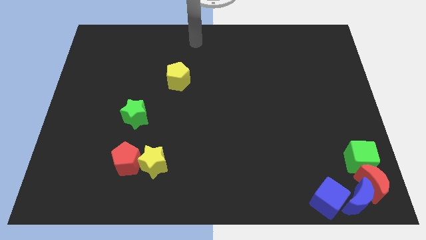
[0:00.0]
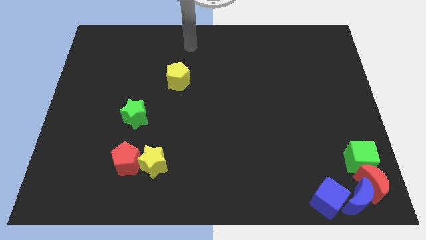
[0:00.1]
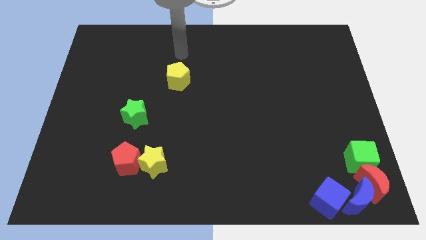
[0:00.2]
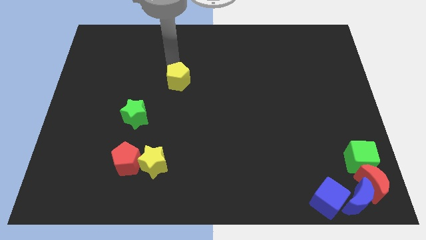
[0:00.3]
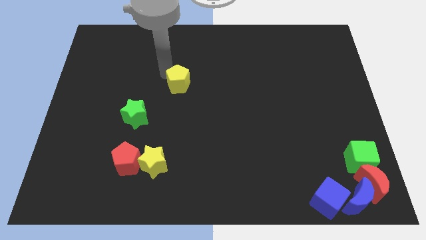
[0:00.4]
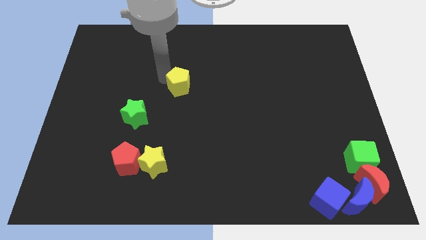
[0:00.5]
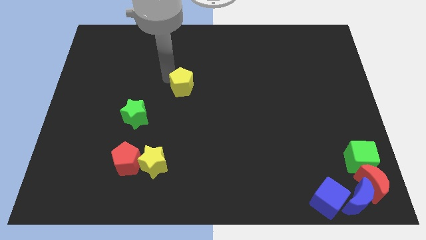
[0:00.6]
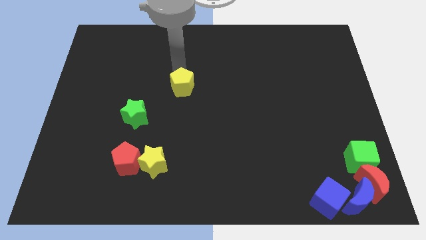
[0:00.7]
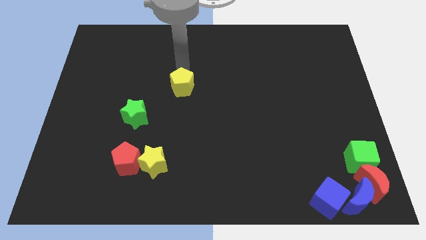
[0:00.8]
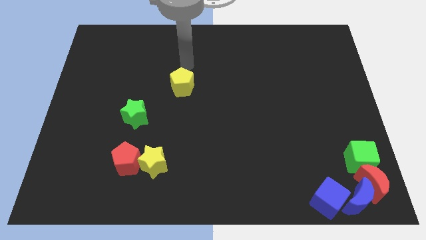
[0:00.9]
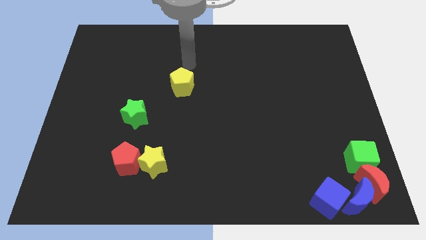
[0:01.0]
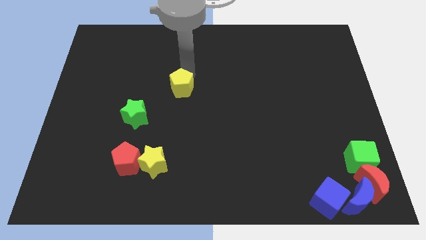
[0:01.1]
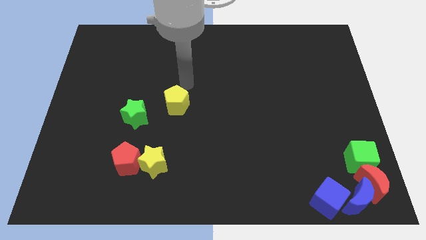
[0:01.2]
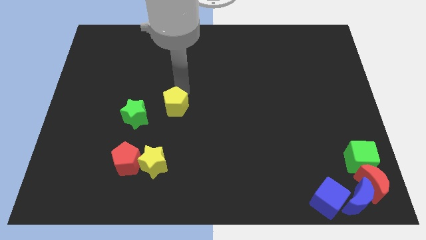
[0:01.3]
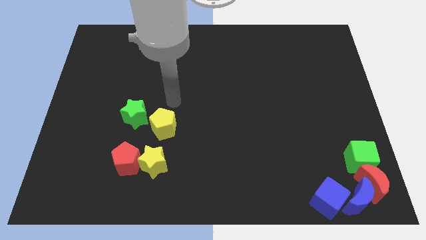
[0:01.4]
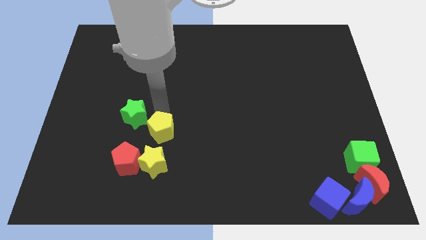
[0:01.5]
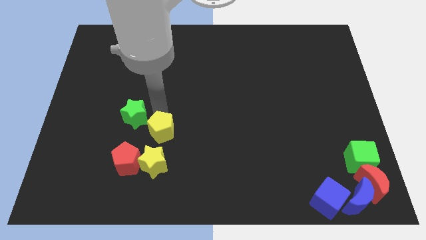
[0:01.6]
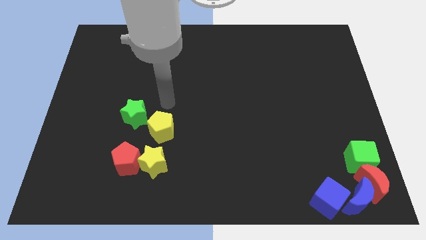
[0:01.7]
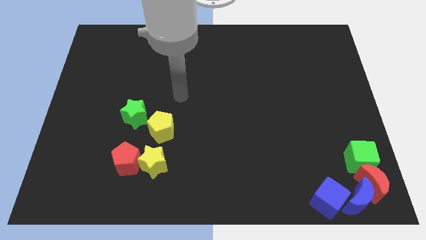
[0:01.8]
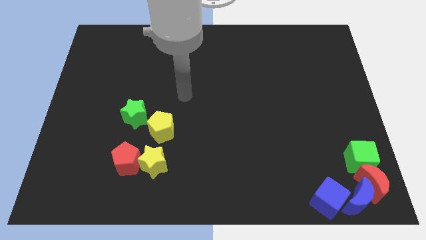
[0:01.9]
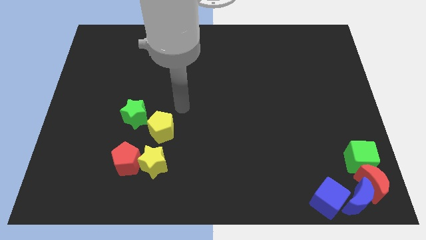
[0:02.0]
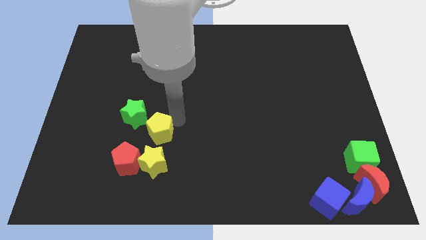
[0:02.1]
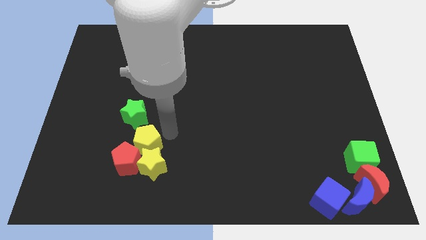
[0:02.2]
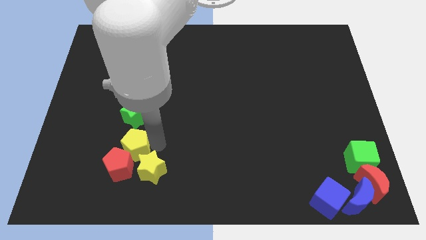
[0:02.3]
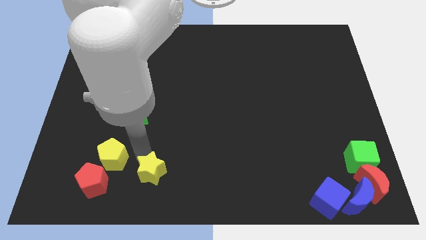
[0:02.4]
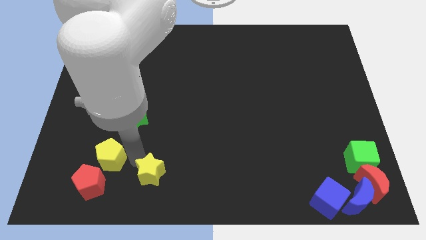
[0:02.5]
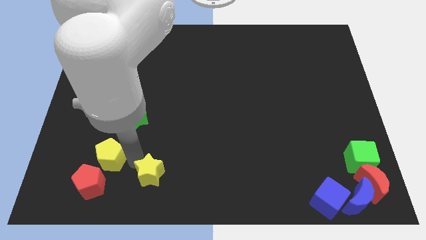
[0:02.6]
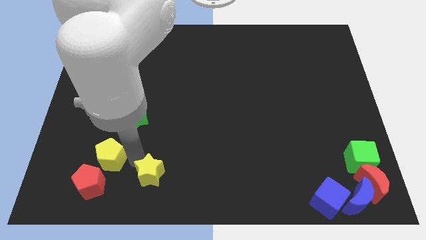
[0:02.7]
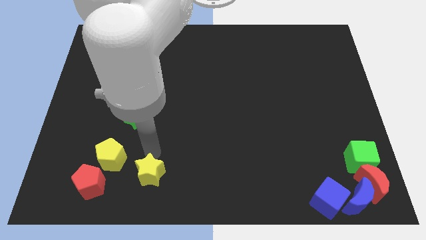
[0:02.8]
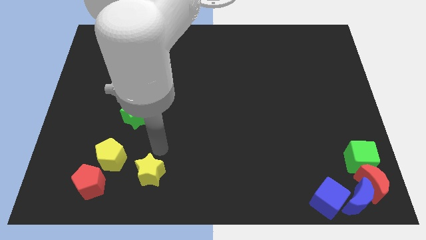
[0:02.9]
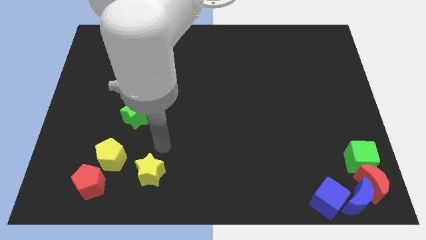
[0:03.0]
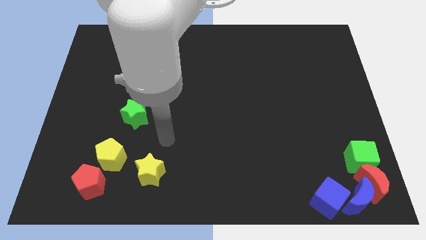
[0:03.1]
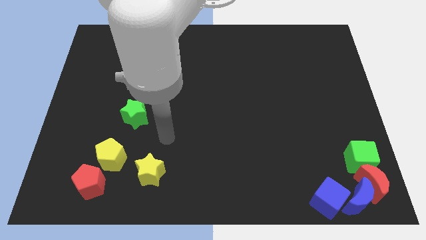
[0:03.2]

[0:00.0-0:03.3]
move the yellow pentagon above to the red pentagon

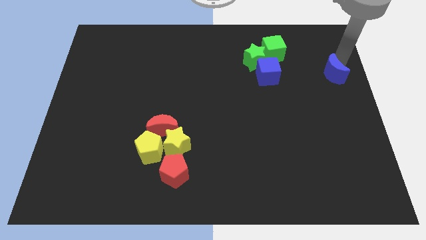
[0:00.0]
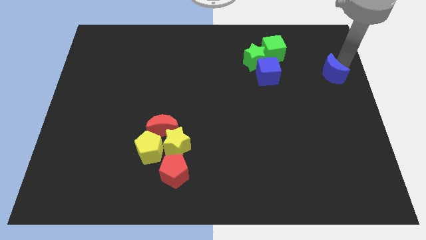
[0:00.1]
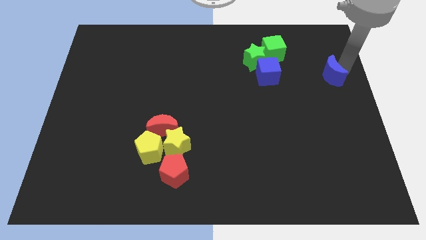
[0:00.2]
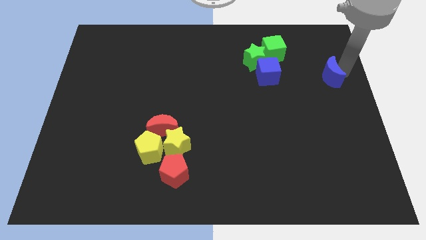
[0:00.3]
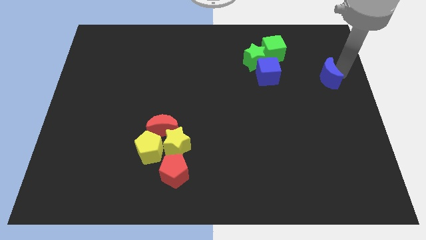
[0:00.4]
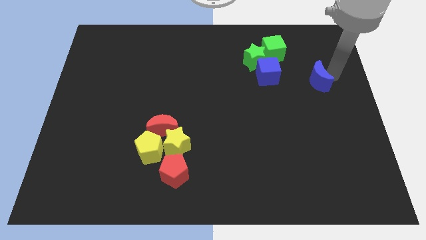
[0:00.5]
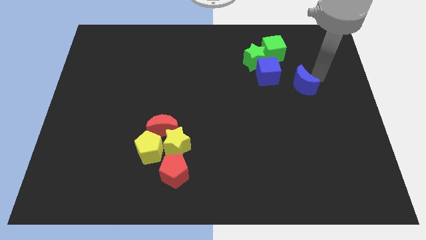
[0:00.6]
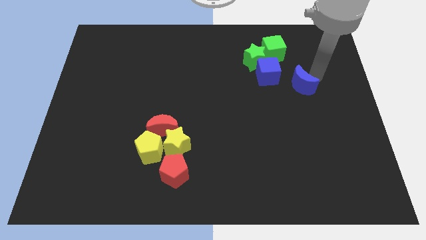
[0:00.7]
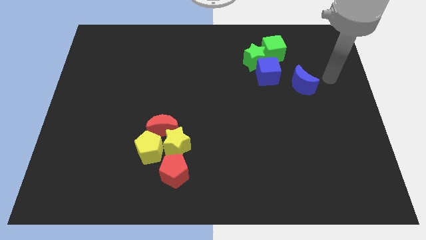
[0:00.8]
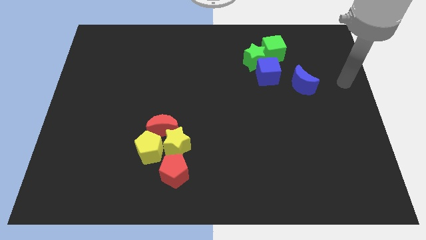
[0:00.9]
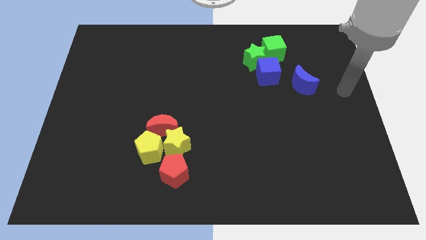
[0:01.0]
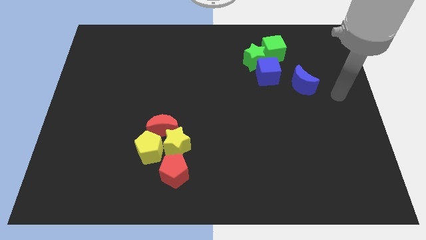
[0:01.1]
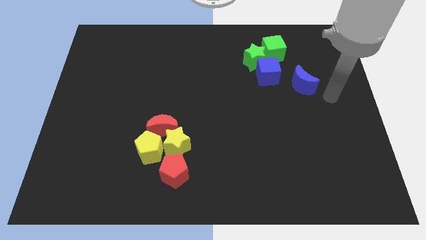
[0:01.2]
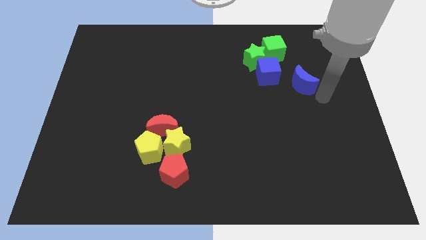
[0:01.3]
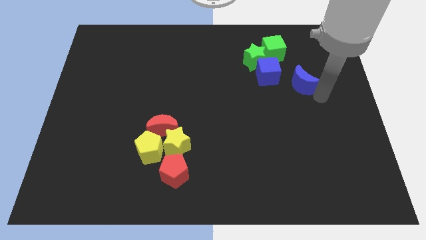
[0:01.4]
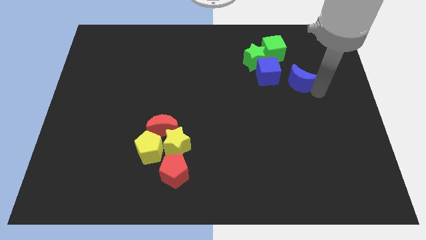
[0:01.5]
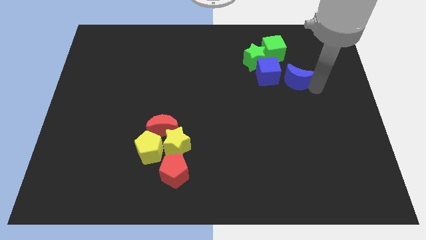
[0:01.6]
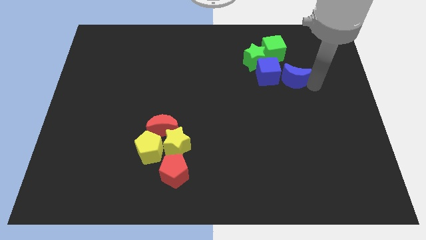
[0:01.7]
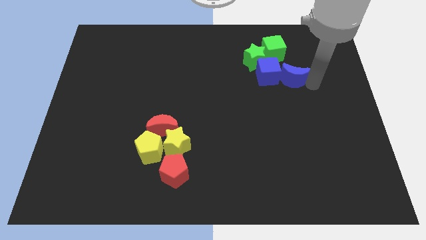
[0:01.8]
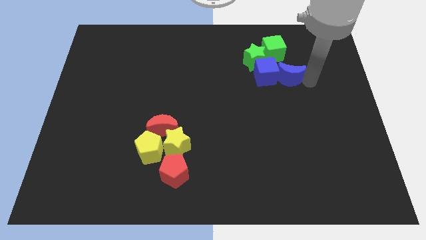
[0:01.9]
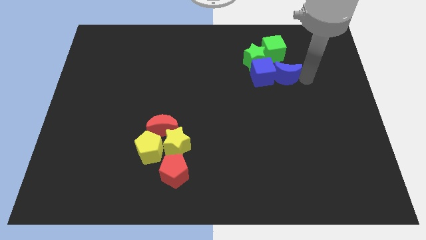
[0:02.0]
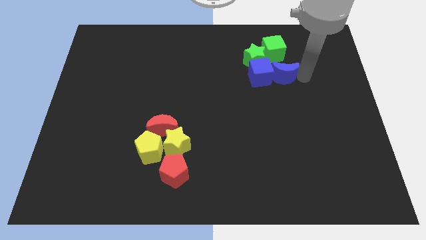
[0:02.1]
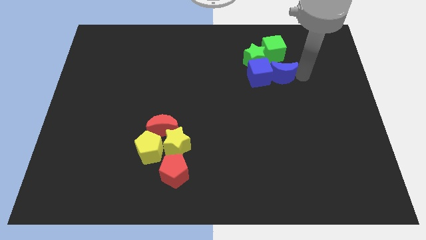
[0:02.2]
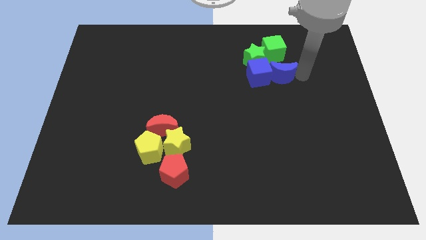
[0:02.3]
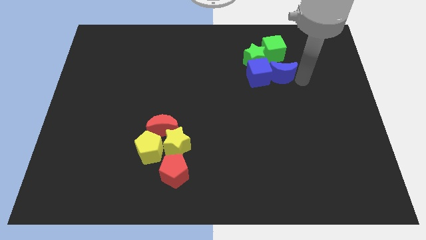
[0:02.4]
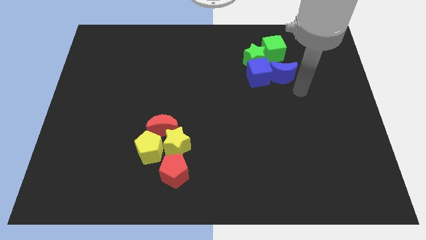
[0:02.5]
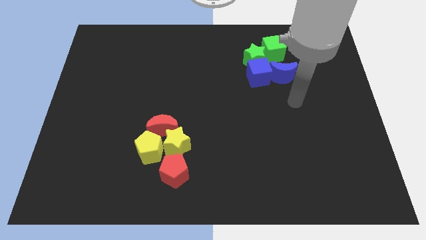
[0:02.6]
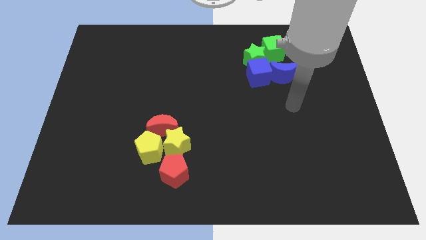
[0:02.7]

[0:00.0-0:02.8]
put the blue moon to the right side of blue cube

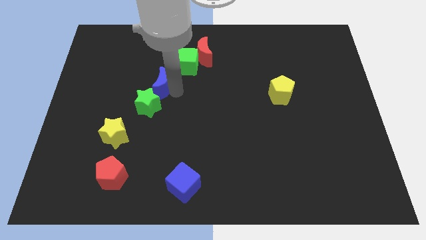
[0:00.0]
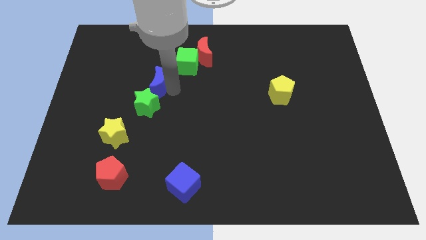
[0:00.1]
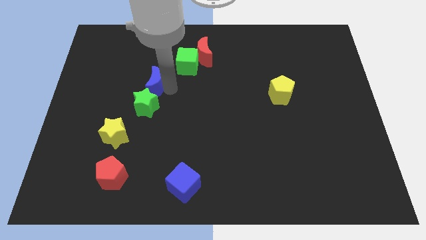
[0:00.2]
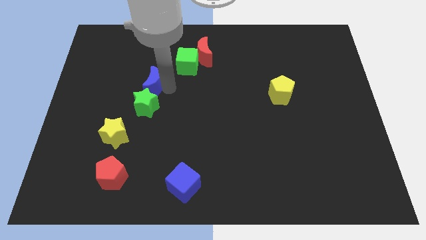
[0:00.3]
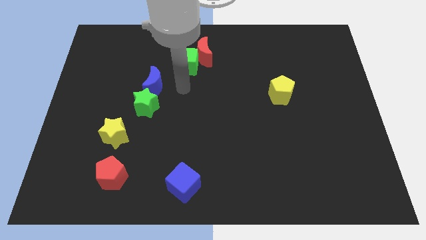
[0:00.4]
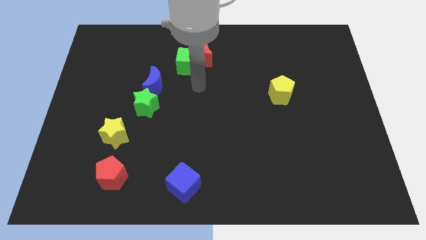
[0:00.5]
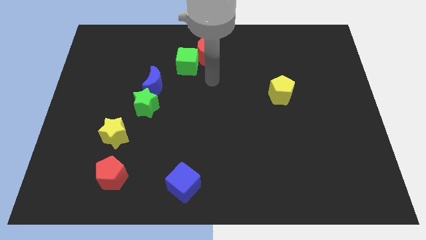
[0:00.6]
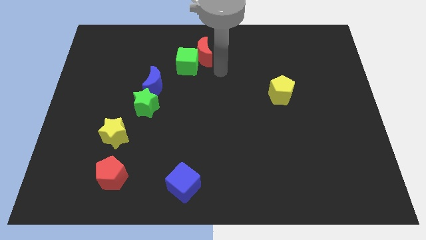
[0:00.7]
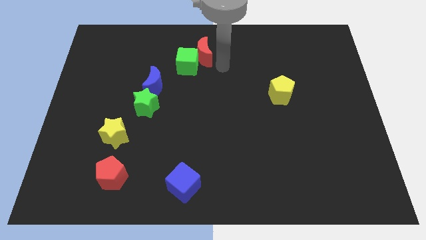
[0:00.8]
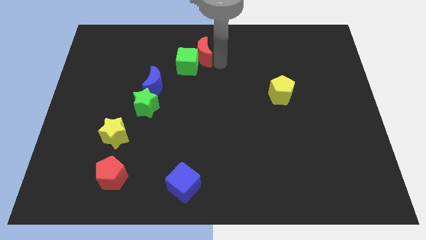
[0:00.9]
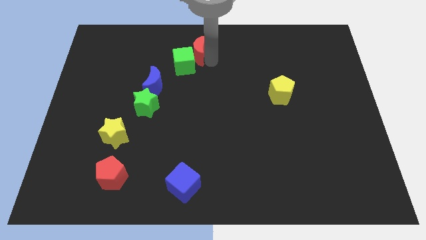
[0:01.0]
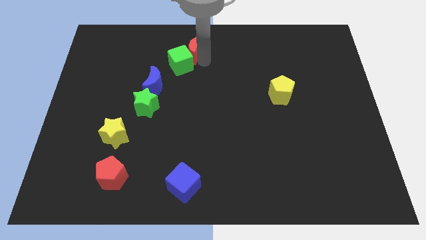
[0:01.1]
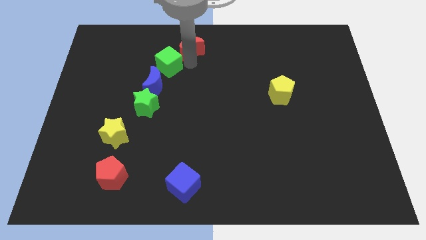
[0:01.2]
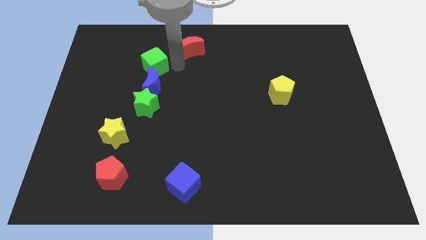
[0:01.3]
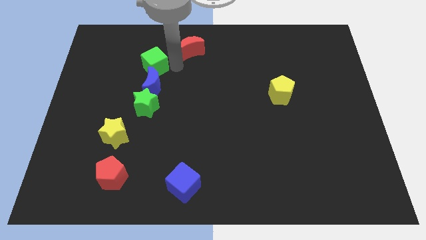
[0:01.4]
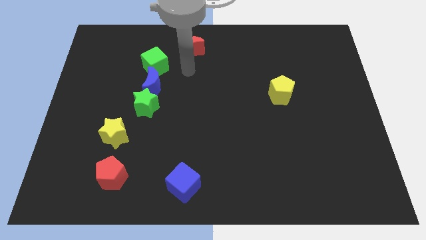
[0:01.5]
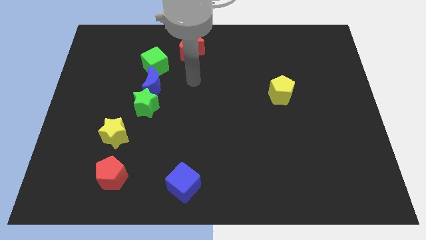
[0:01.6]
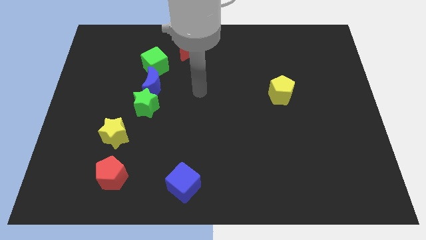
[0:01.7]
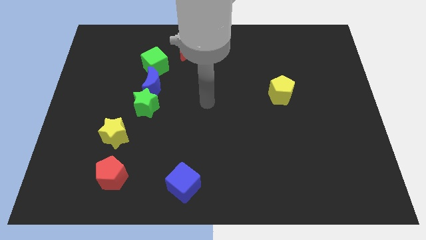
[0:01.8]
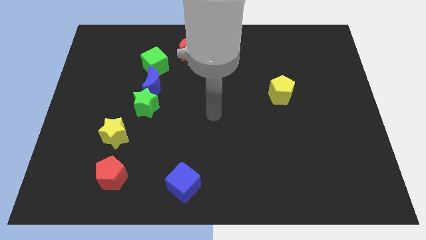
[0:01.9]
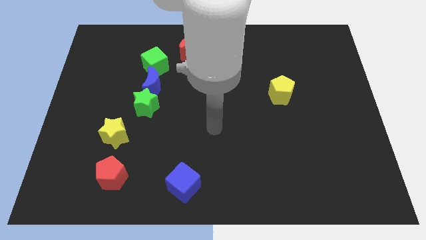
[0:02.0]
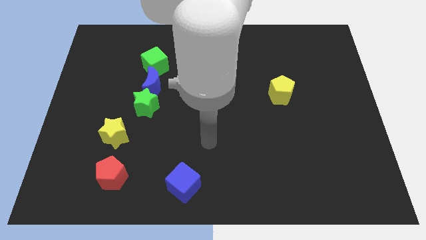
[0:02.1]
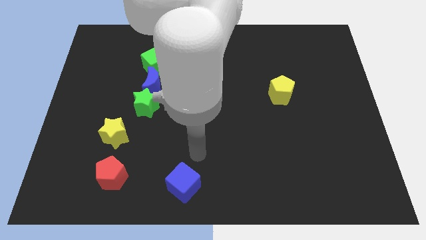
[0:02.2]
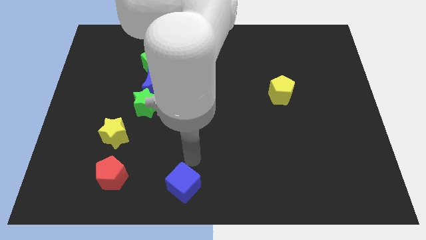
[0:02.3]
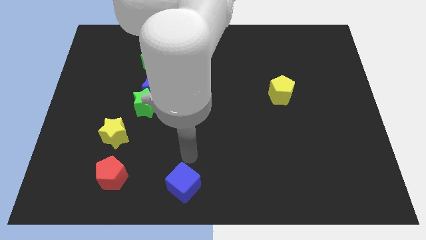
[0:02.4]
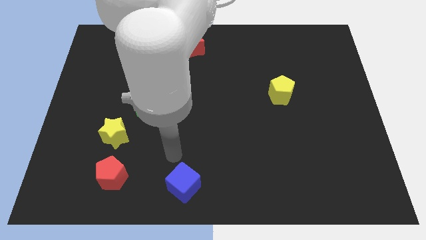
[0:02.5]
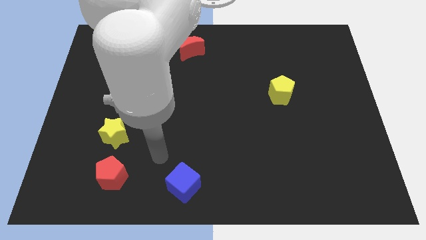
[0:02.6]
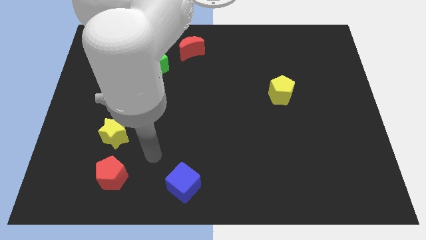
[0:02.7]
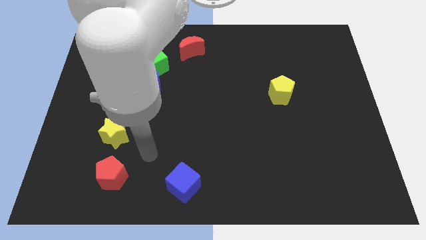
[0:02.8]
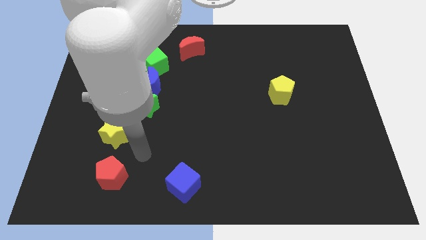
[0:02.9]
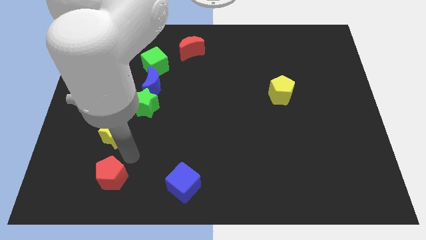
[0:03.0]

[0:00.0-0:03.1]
move green cube above blue moon
